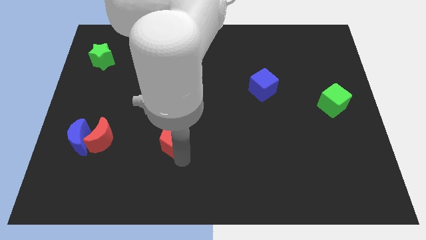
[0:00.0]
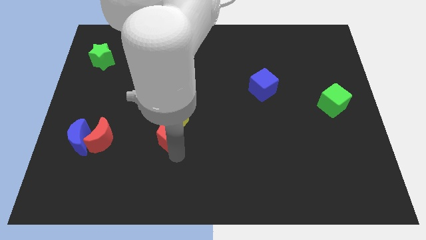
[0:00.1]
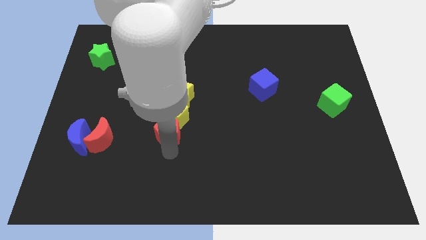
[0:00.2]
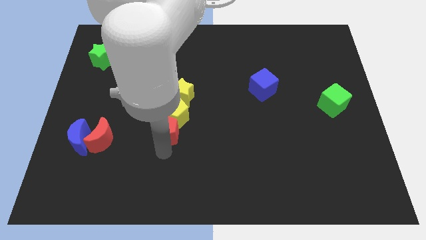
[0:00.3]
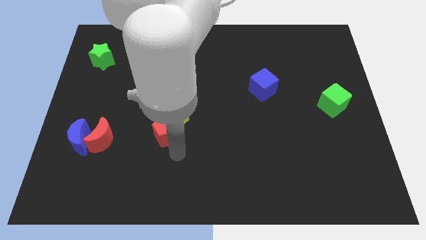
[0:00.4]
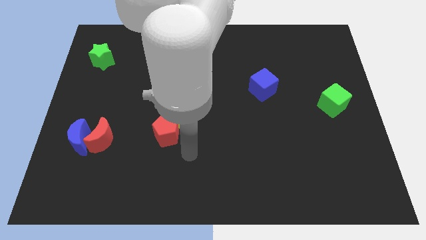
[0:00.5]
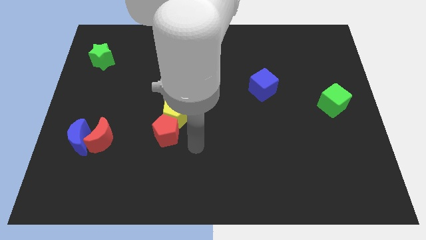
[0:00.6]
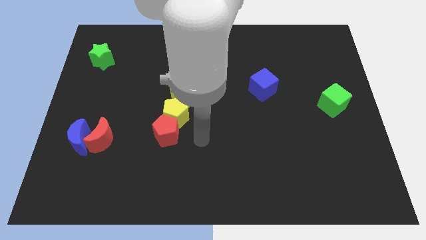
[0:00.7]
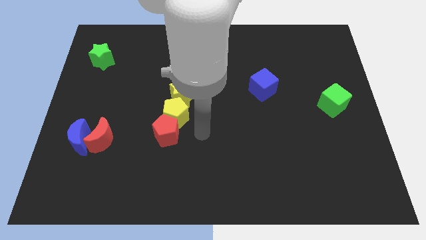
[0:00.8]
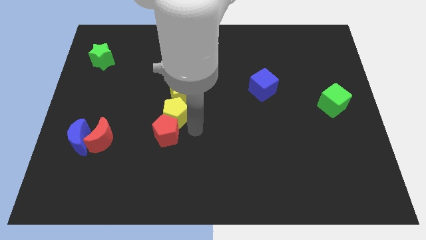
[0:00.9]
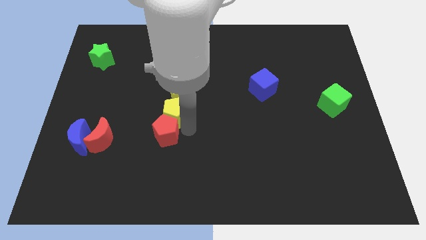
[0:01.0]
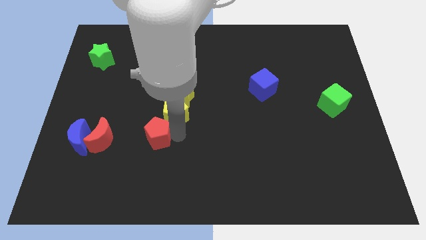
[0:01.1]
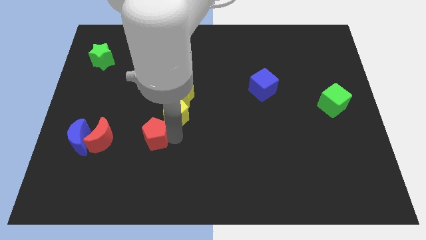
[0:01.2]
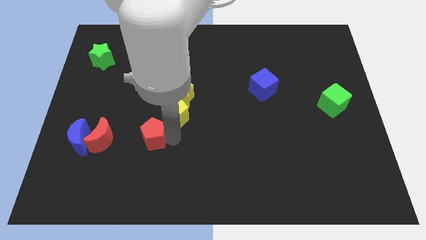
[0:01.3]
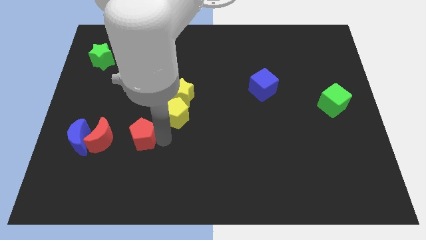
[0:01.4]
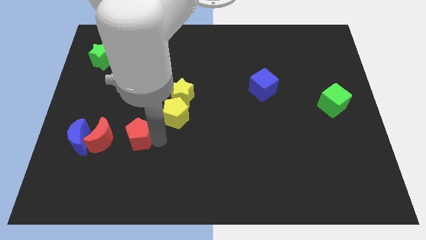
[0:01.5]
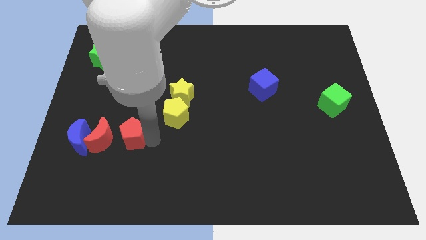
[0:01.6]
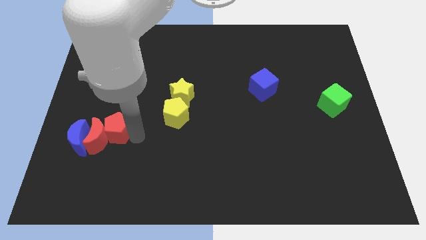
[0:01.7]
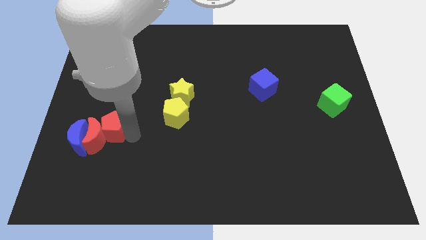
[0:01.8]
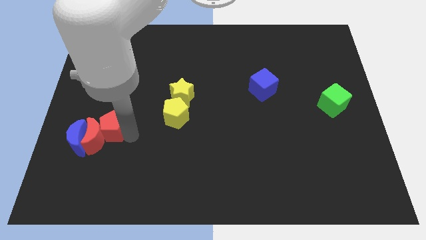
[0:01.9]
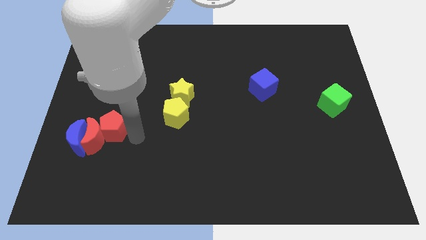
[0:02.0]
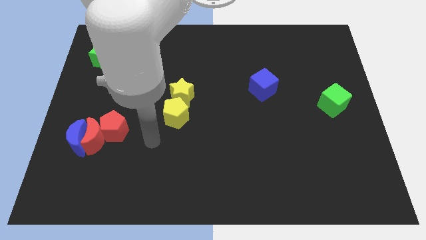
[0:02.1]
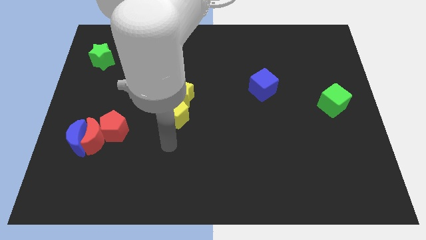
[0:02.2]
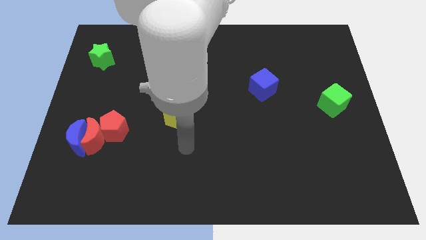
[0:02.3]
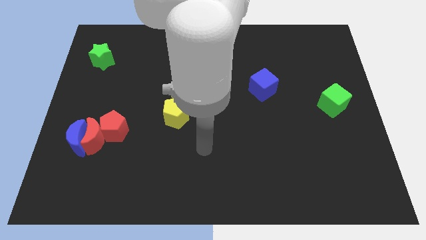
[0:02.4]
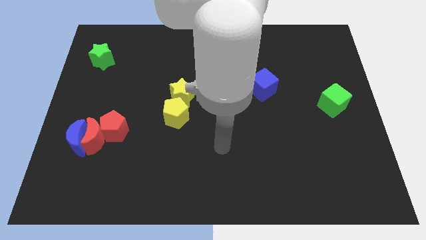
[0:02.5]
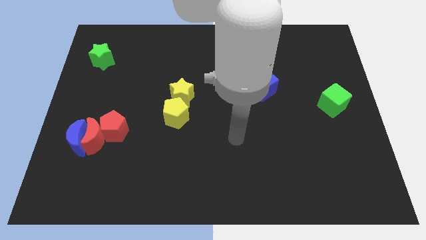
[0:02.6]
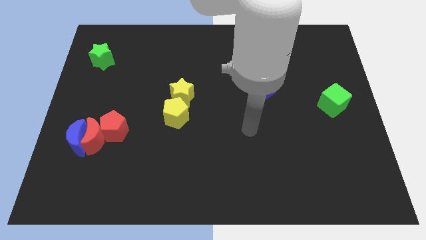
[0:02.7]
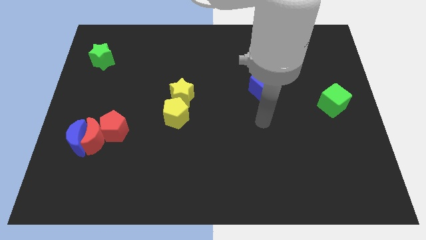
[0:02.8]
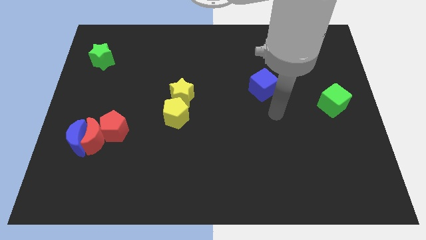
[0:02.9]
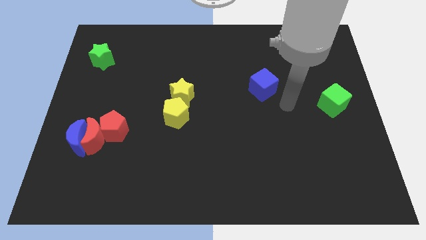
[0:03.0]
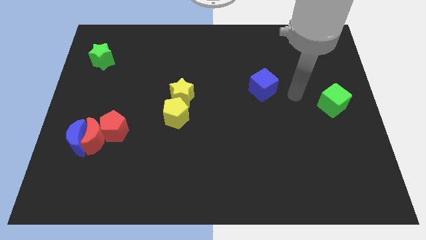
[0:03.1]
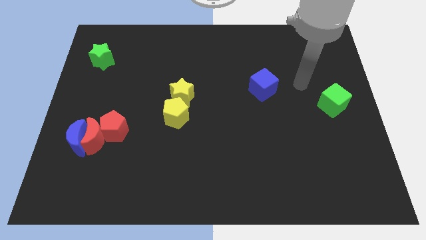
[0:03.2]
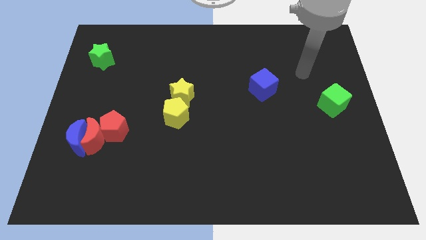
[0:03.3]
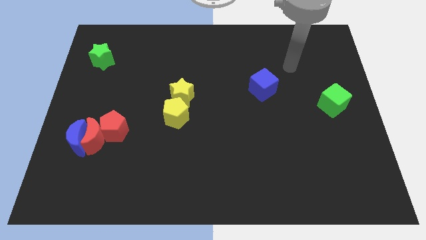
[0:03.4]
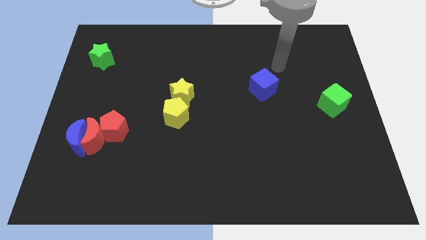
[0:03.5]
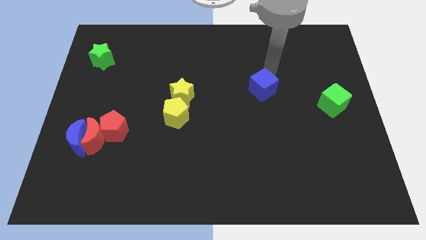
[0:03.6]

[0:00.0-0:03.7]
push the red pentagon into the red crescent

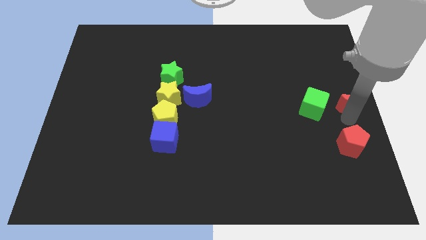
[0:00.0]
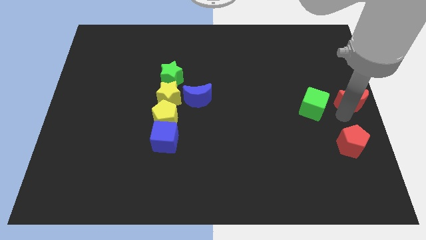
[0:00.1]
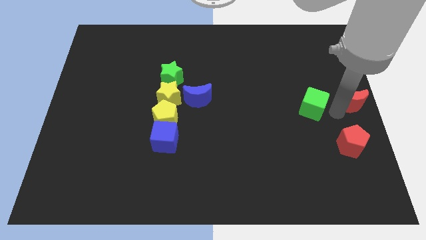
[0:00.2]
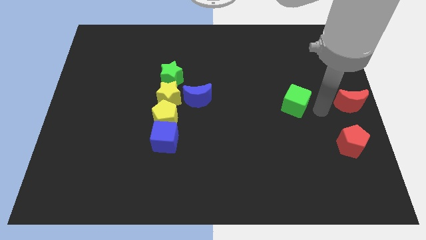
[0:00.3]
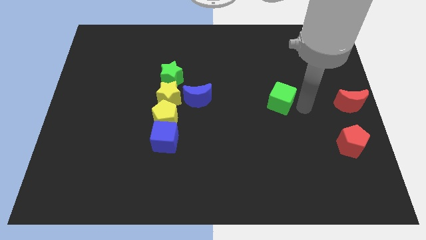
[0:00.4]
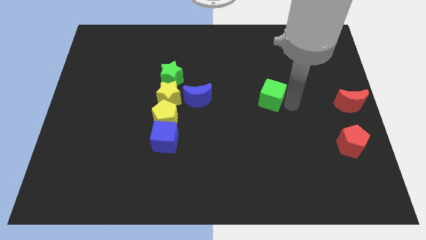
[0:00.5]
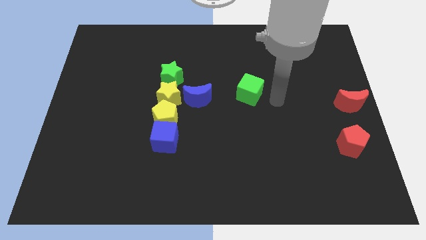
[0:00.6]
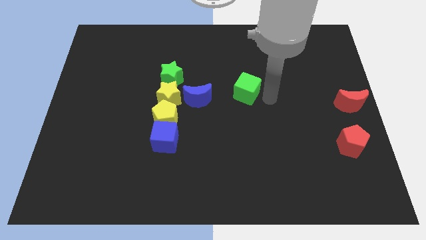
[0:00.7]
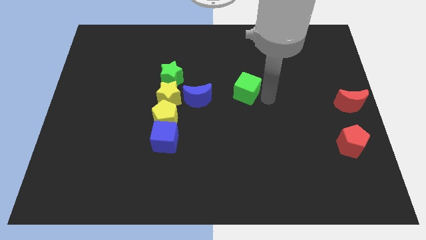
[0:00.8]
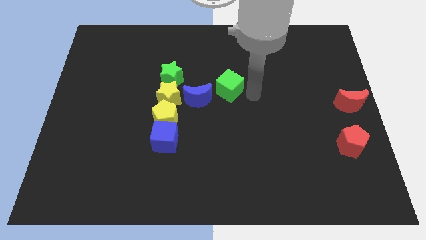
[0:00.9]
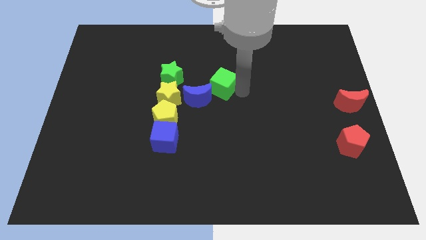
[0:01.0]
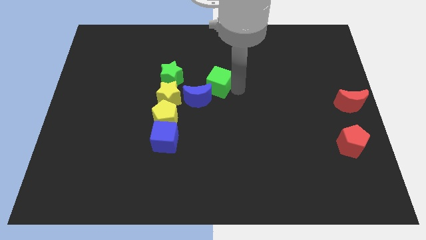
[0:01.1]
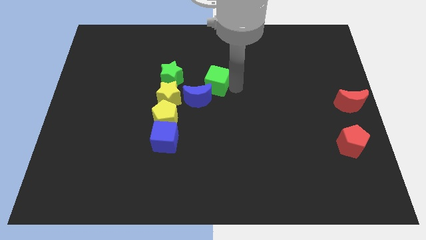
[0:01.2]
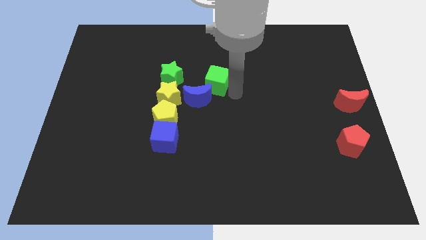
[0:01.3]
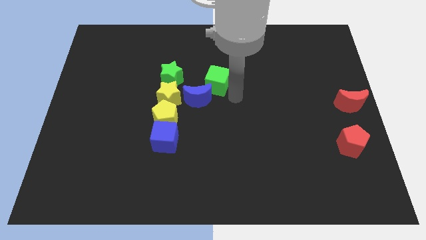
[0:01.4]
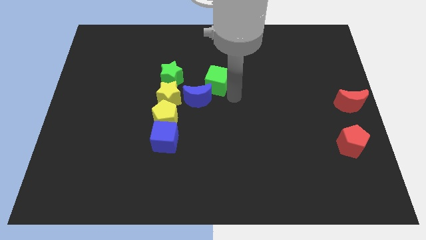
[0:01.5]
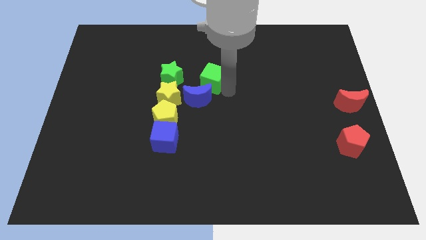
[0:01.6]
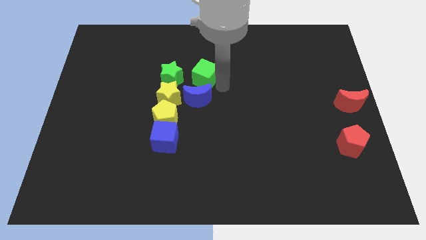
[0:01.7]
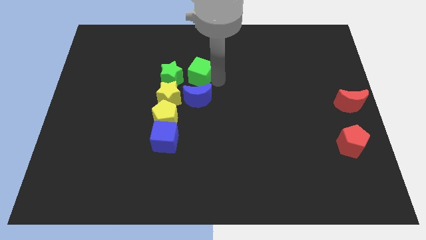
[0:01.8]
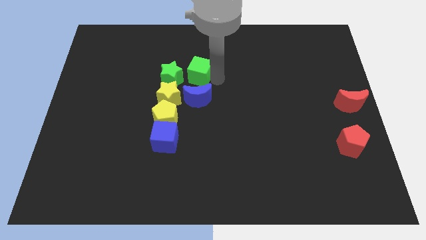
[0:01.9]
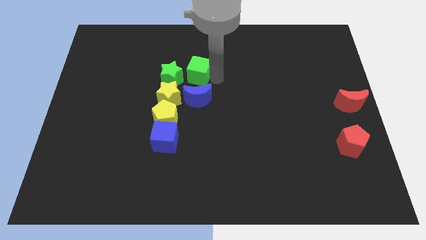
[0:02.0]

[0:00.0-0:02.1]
move the green cube to the top side of the blue moon

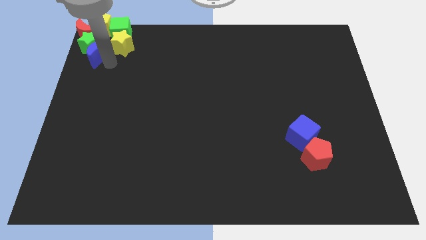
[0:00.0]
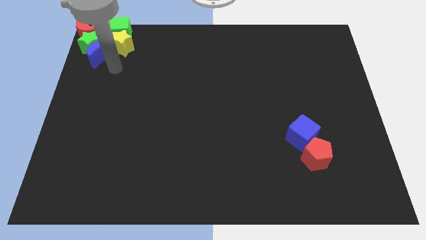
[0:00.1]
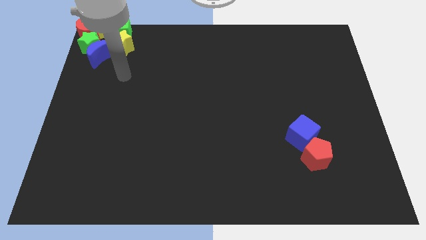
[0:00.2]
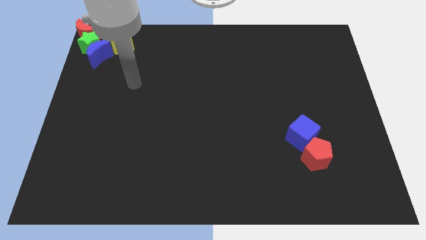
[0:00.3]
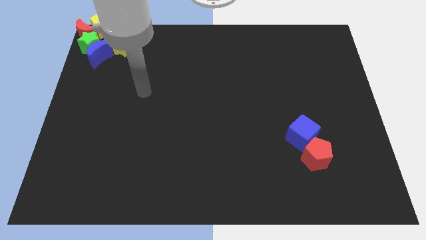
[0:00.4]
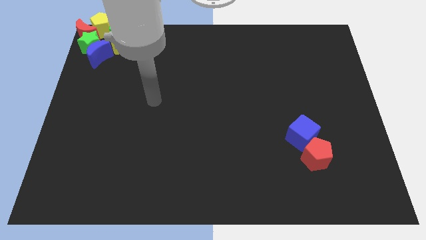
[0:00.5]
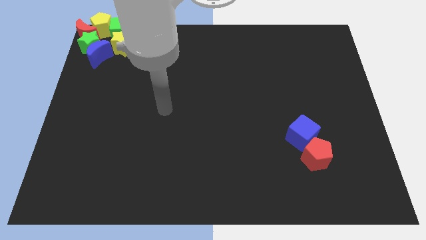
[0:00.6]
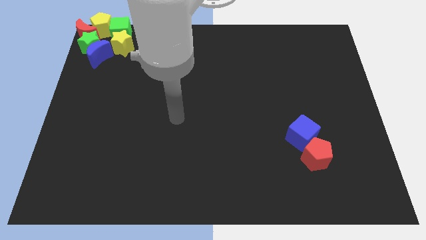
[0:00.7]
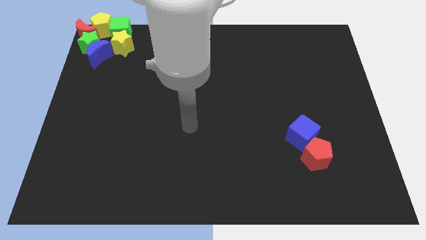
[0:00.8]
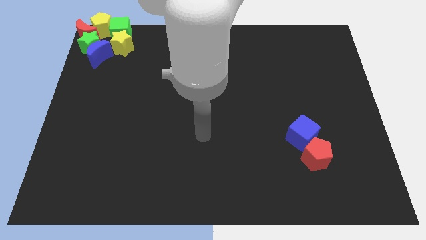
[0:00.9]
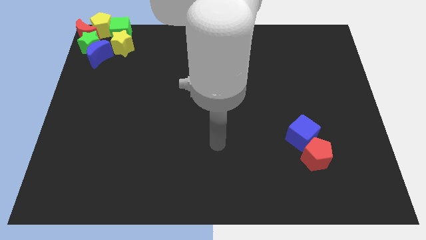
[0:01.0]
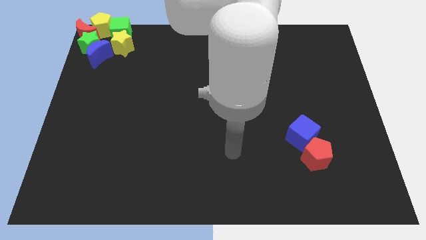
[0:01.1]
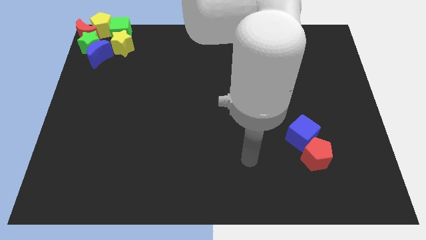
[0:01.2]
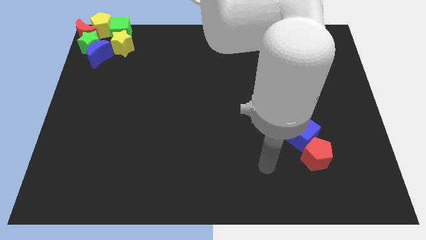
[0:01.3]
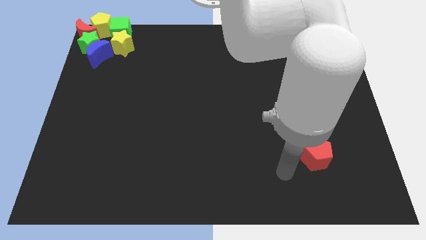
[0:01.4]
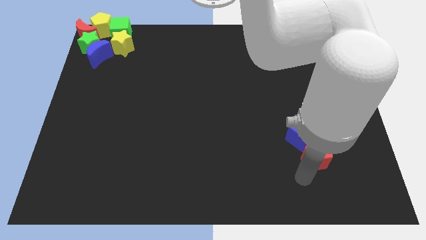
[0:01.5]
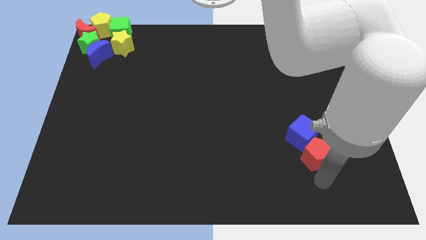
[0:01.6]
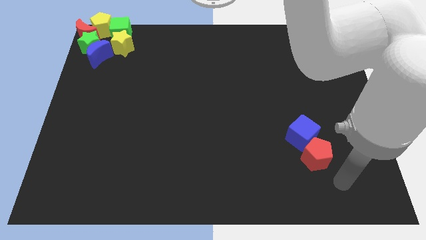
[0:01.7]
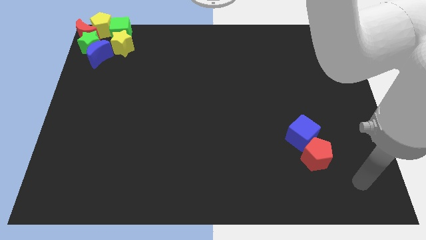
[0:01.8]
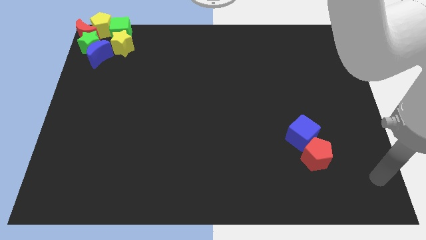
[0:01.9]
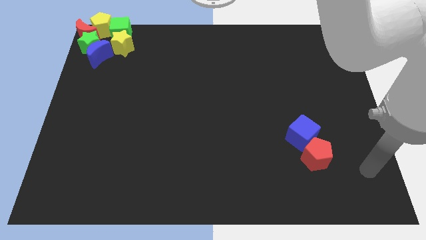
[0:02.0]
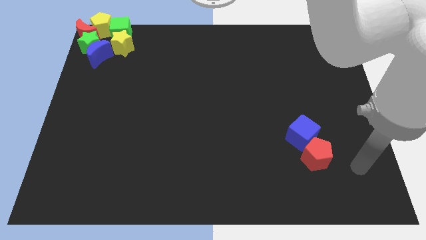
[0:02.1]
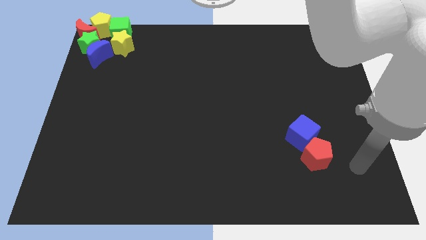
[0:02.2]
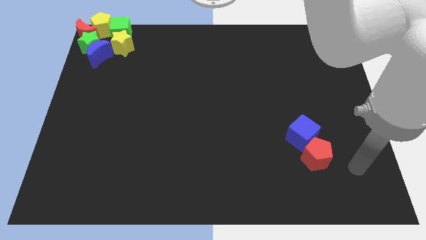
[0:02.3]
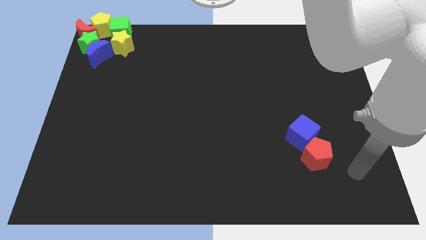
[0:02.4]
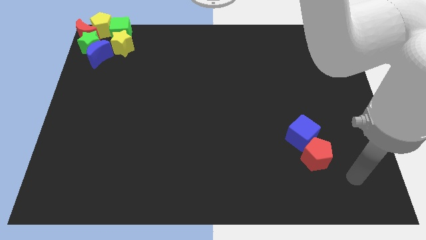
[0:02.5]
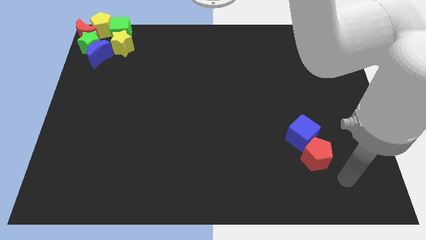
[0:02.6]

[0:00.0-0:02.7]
go and point your hand at the bottom right of the red pentagon

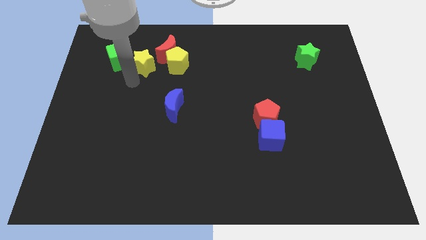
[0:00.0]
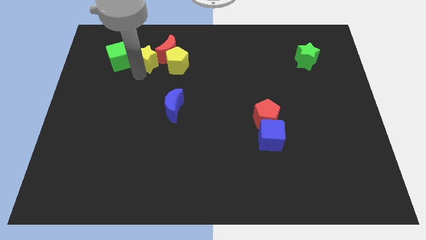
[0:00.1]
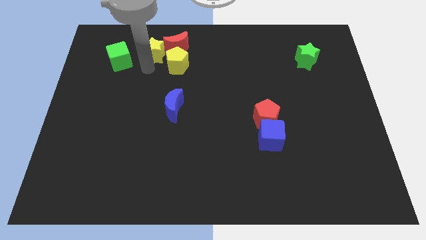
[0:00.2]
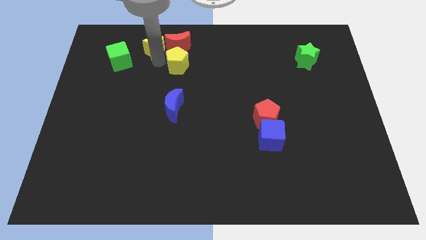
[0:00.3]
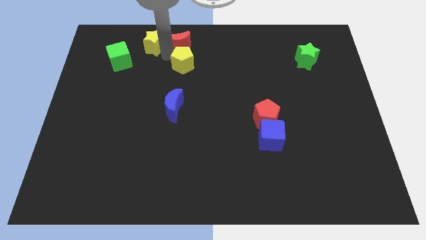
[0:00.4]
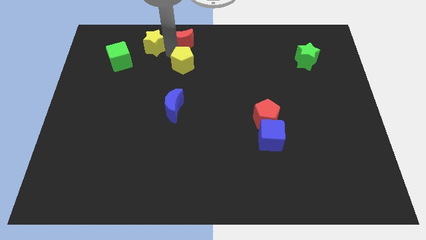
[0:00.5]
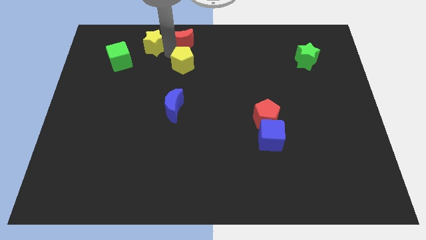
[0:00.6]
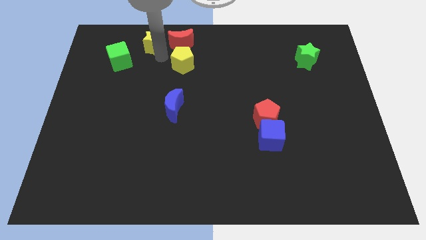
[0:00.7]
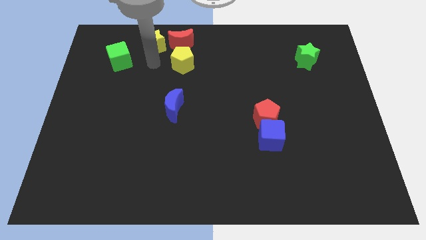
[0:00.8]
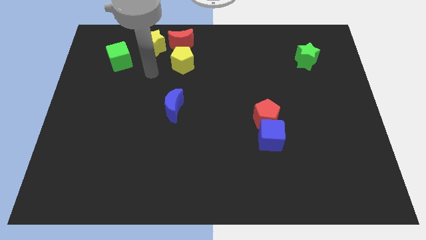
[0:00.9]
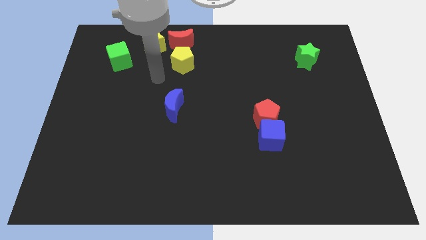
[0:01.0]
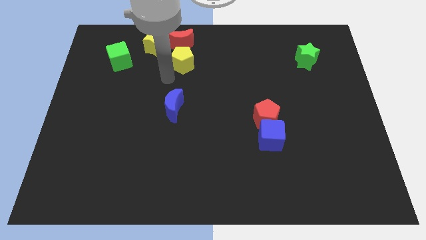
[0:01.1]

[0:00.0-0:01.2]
drag yellow start slightly upside to the board
